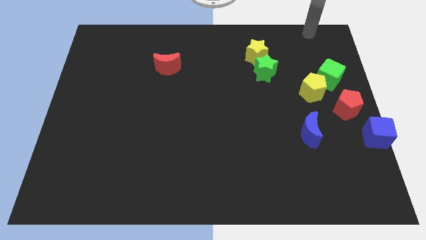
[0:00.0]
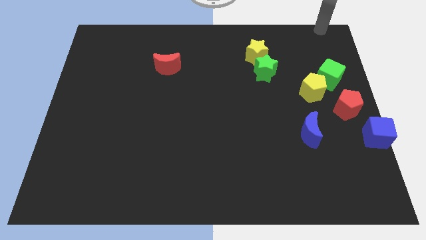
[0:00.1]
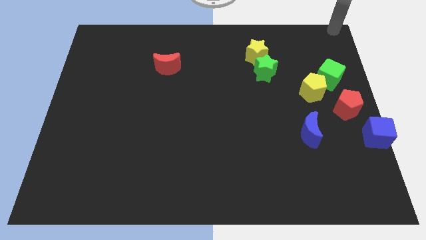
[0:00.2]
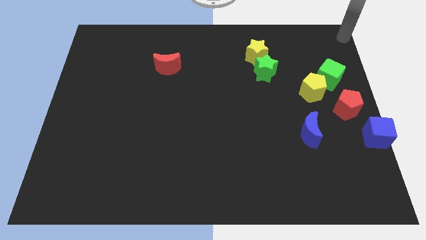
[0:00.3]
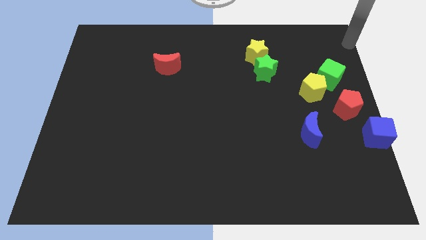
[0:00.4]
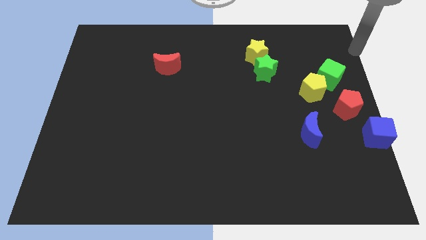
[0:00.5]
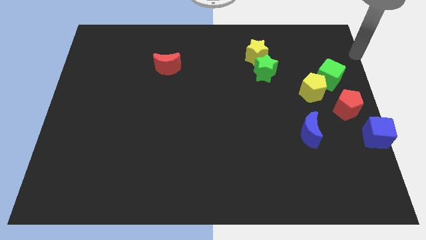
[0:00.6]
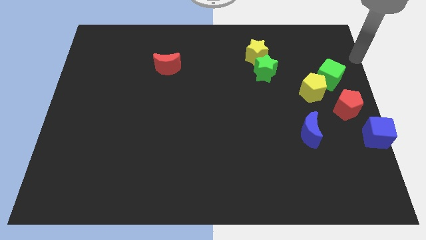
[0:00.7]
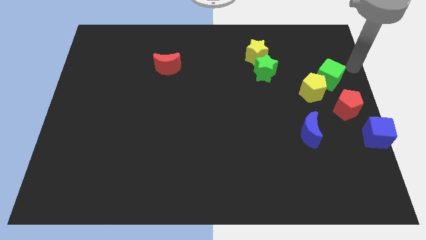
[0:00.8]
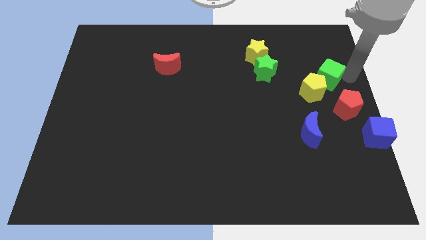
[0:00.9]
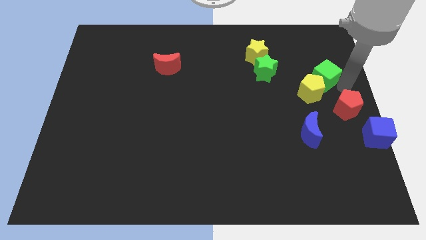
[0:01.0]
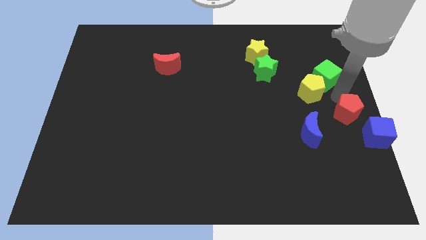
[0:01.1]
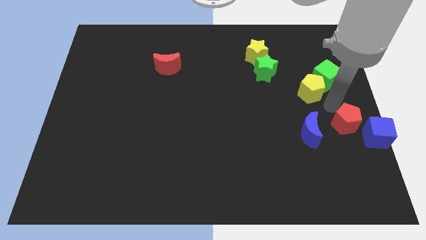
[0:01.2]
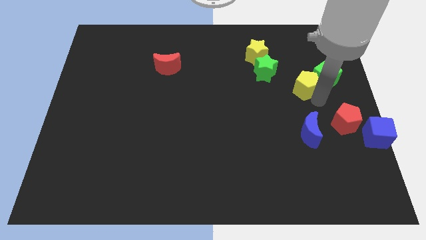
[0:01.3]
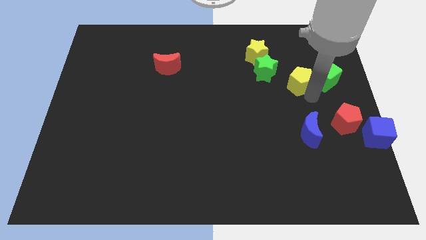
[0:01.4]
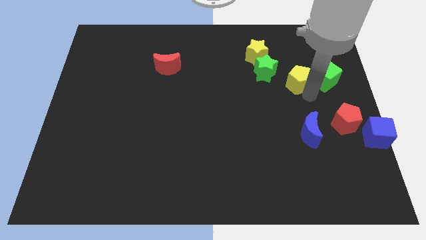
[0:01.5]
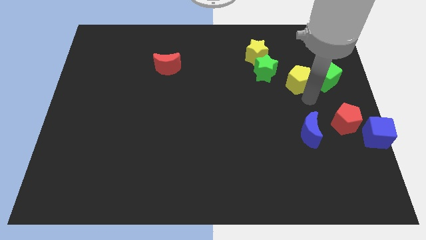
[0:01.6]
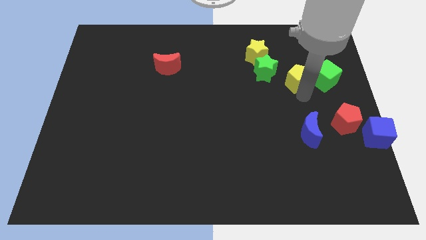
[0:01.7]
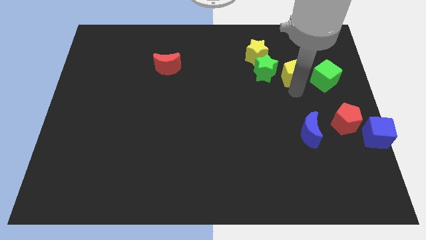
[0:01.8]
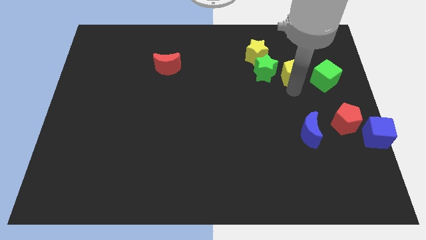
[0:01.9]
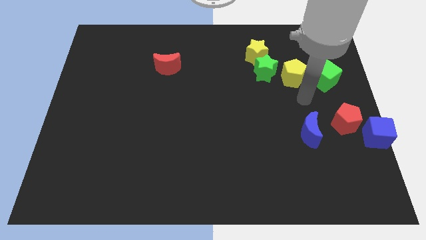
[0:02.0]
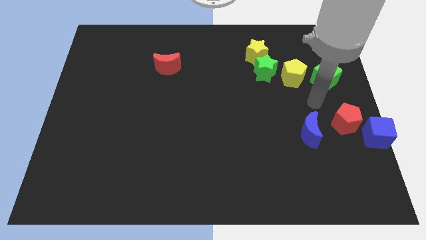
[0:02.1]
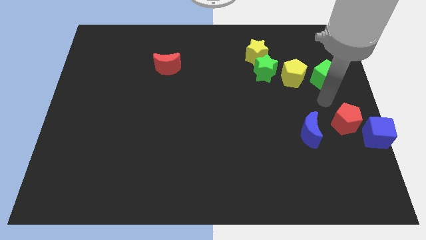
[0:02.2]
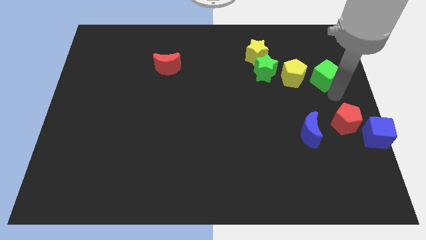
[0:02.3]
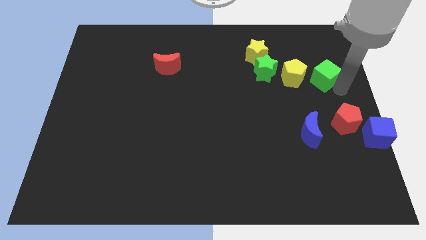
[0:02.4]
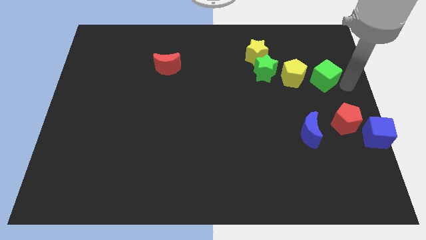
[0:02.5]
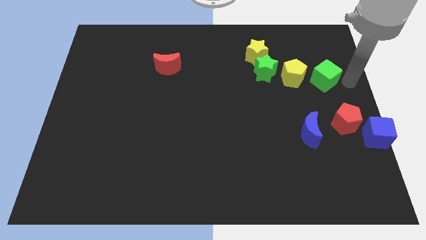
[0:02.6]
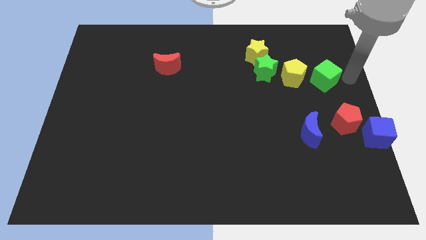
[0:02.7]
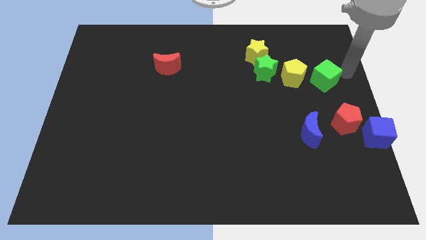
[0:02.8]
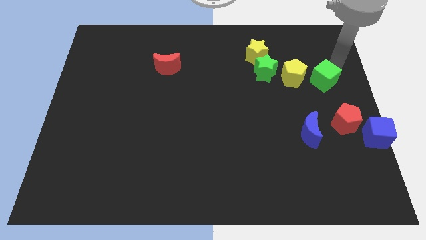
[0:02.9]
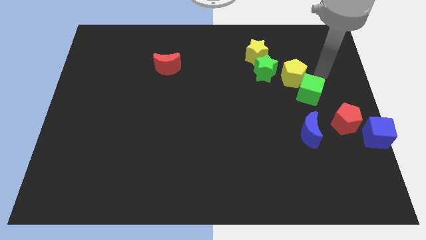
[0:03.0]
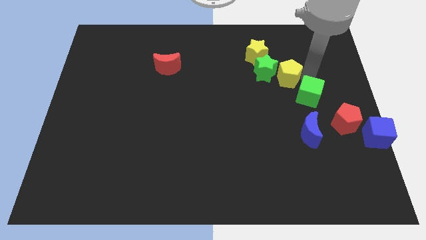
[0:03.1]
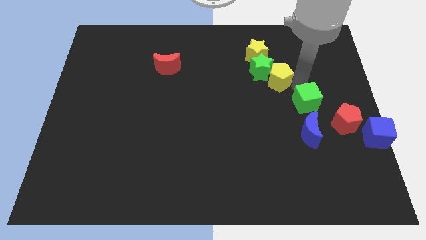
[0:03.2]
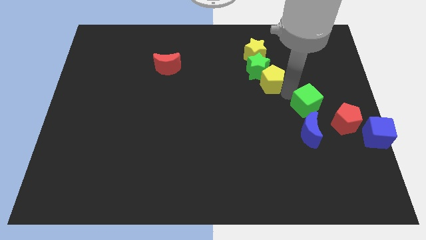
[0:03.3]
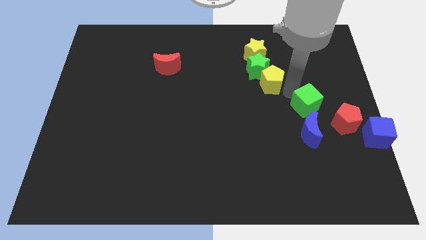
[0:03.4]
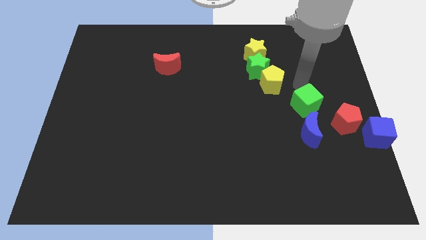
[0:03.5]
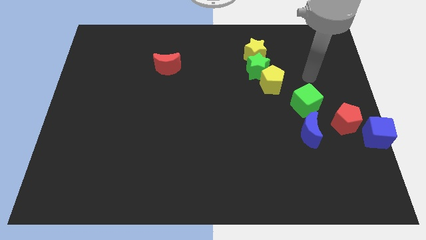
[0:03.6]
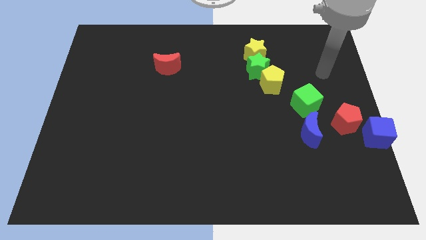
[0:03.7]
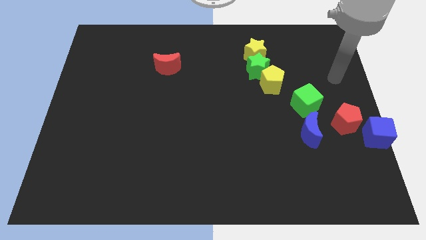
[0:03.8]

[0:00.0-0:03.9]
separate yellow pentagon and the green cube

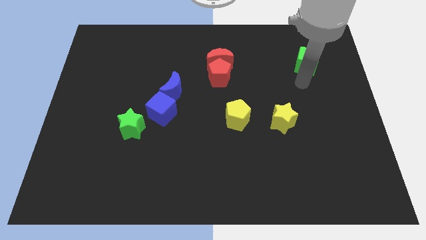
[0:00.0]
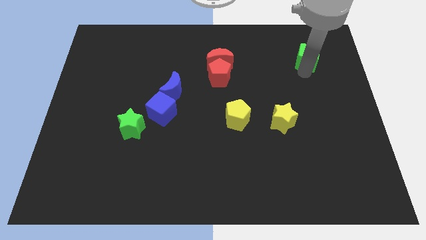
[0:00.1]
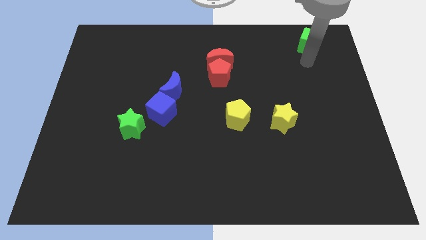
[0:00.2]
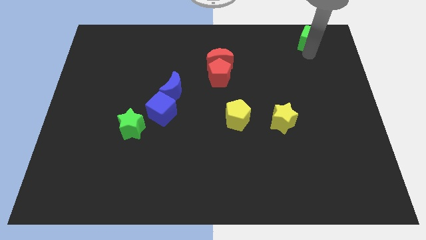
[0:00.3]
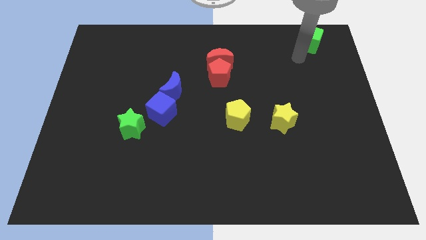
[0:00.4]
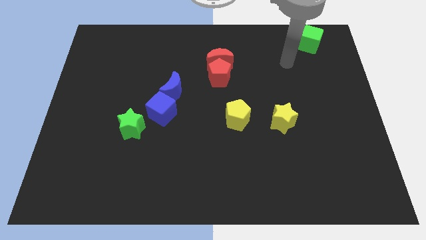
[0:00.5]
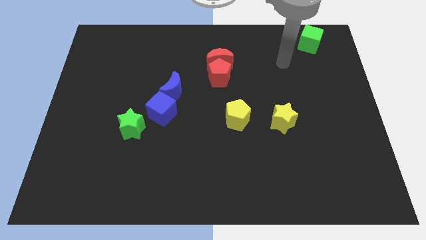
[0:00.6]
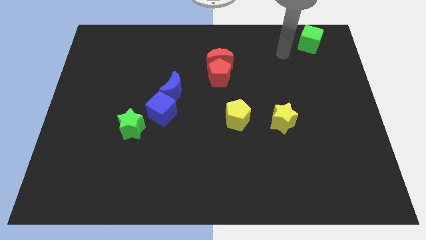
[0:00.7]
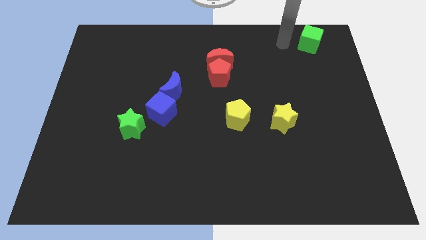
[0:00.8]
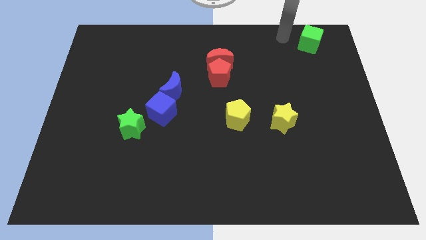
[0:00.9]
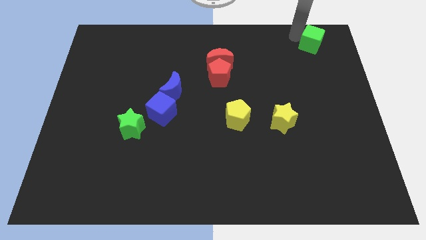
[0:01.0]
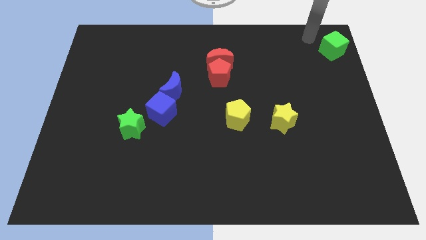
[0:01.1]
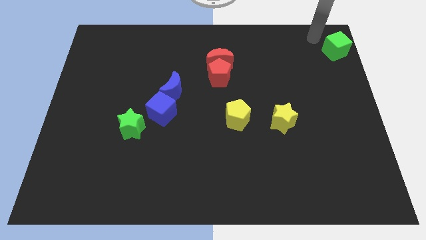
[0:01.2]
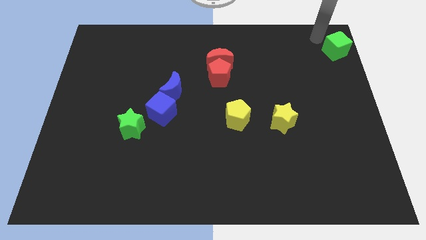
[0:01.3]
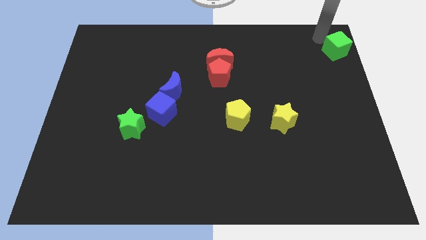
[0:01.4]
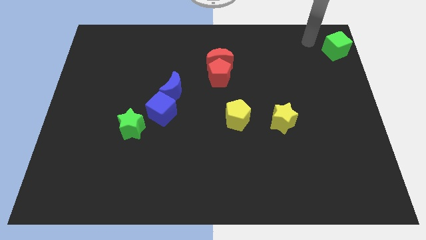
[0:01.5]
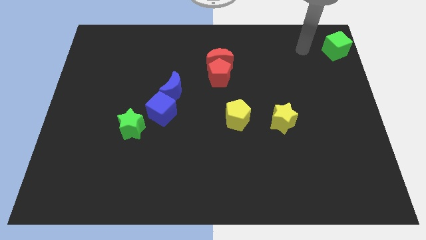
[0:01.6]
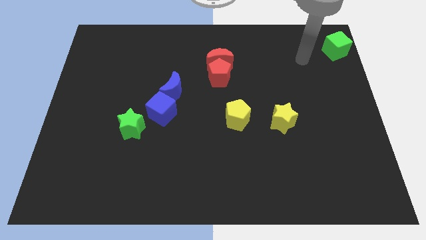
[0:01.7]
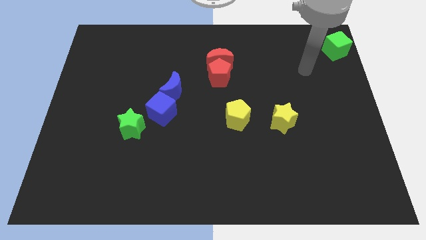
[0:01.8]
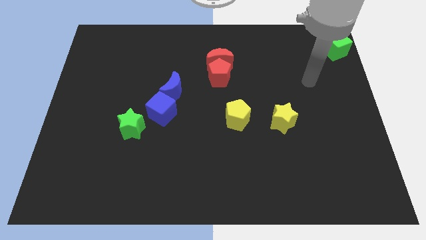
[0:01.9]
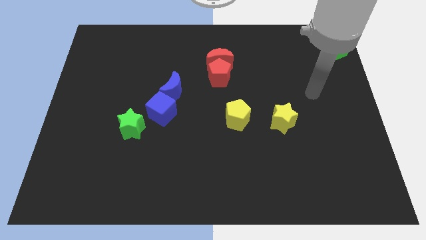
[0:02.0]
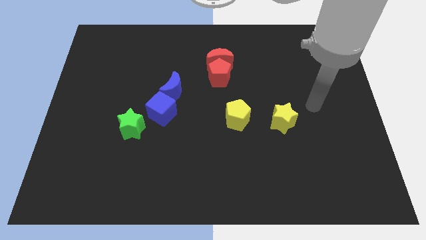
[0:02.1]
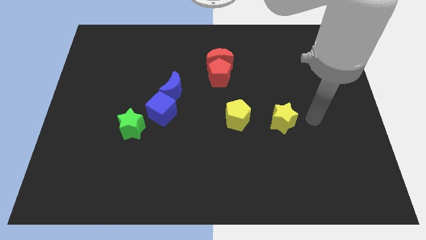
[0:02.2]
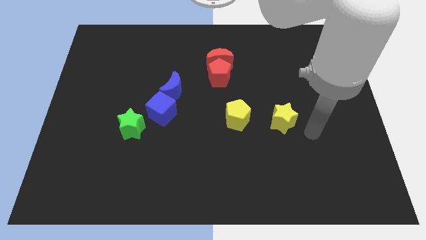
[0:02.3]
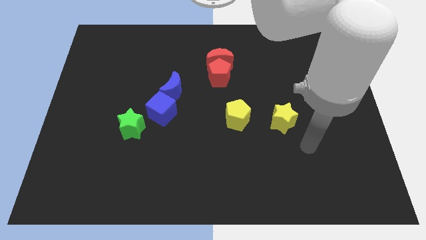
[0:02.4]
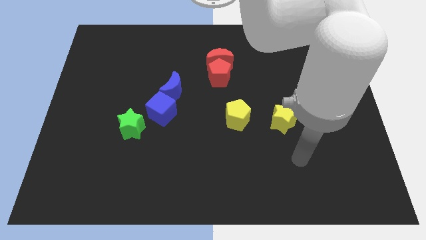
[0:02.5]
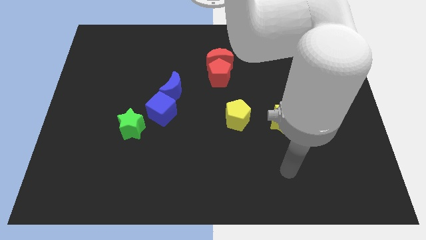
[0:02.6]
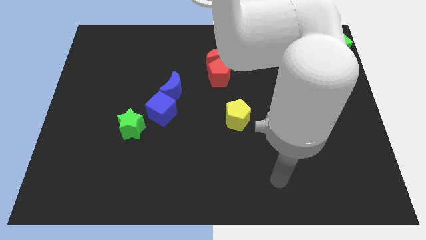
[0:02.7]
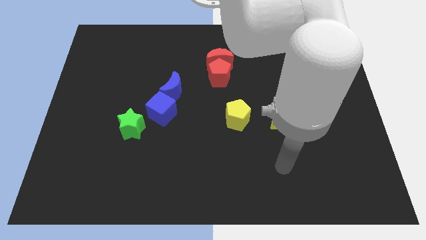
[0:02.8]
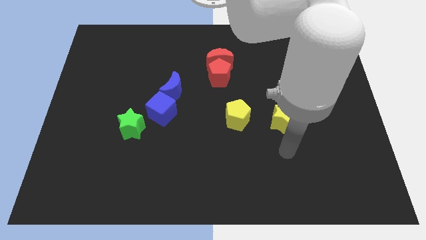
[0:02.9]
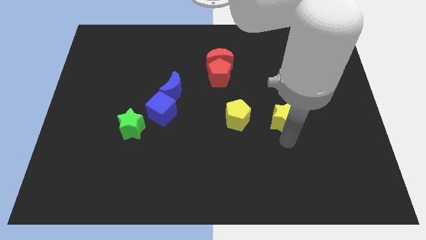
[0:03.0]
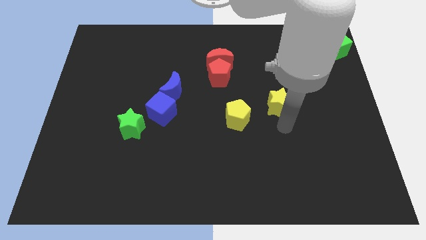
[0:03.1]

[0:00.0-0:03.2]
put the green cube at the top right corner

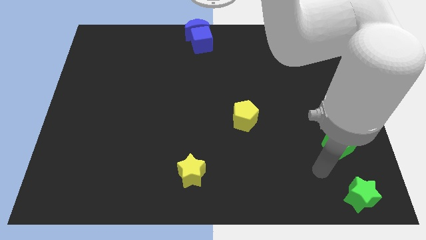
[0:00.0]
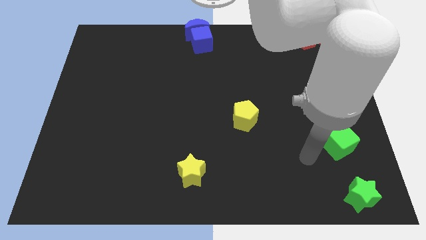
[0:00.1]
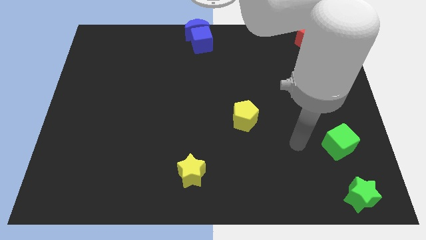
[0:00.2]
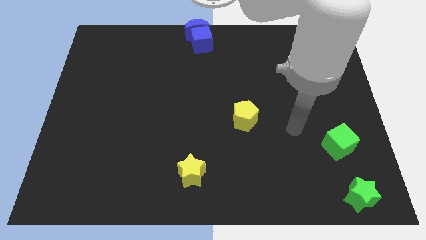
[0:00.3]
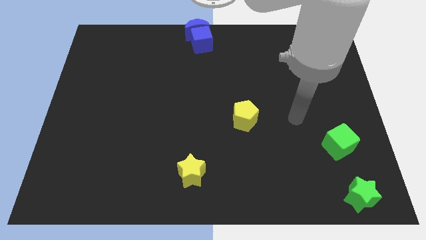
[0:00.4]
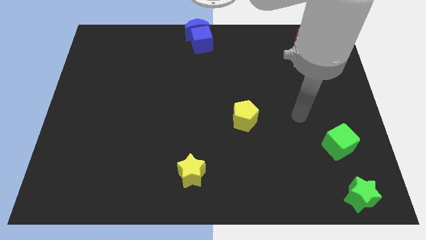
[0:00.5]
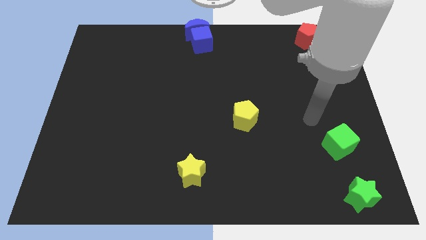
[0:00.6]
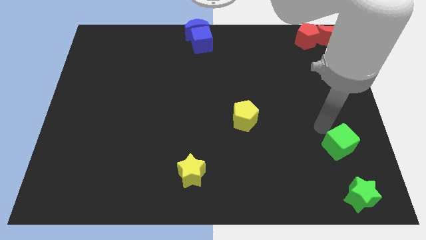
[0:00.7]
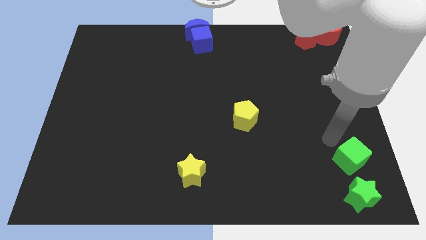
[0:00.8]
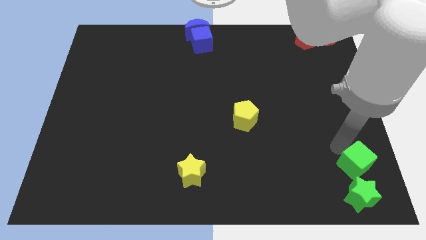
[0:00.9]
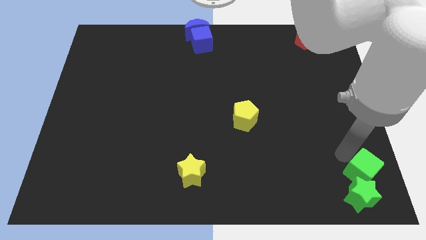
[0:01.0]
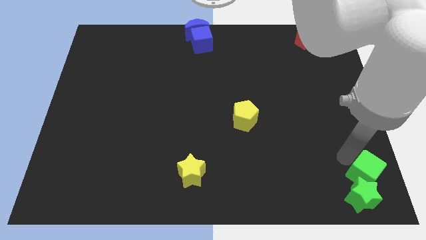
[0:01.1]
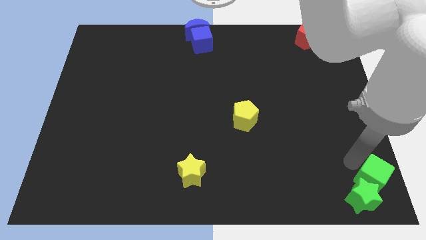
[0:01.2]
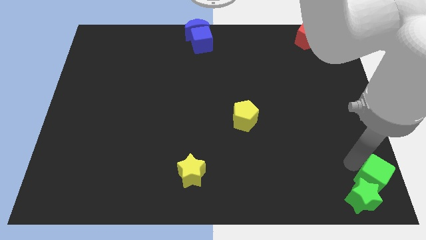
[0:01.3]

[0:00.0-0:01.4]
push the green cube into the green star

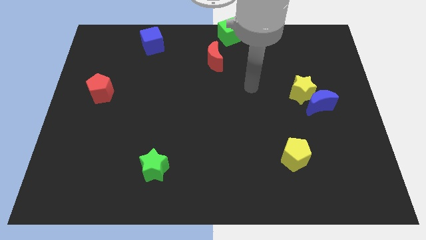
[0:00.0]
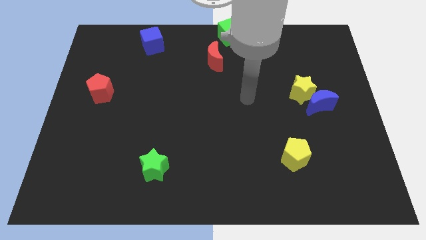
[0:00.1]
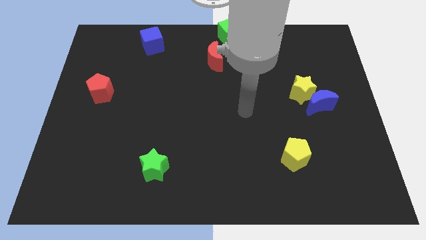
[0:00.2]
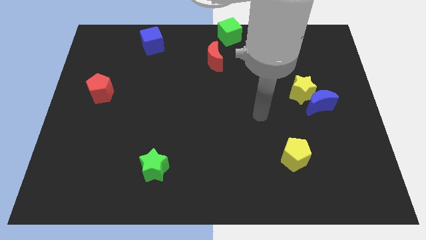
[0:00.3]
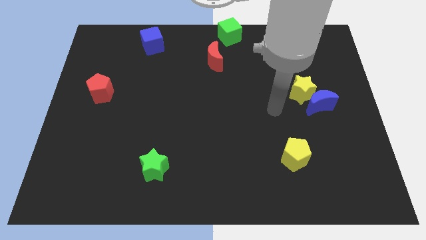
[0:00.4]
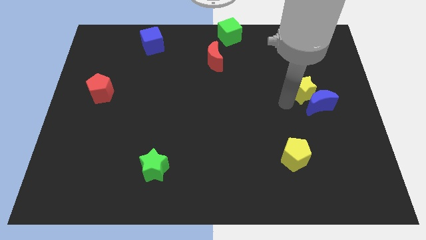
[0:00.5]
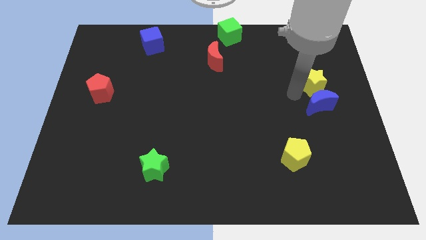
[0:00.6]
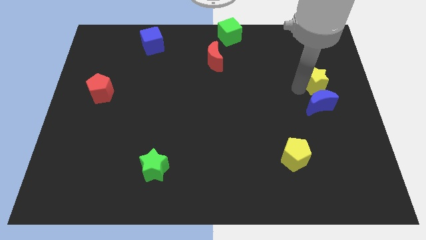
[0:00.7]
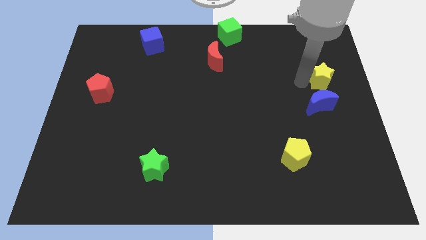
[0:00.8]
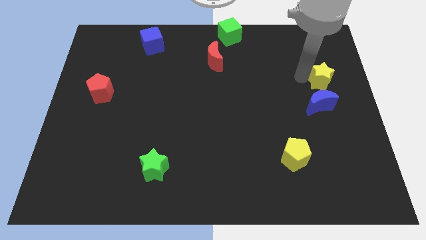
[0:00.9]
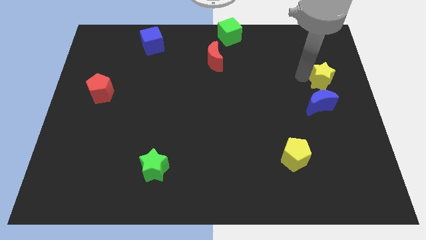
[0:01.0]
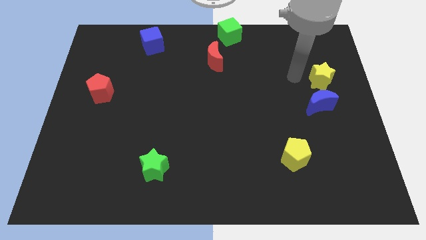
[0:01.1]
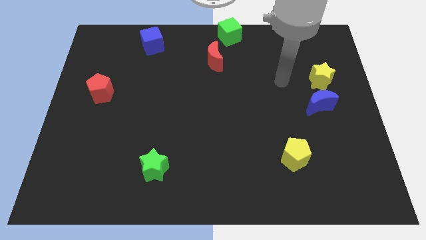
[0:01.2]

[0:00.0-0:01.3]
move yellow star above blue moon
